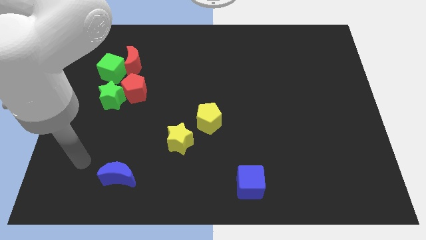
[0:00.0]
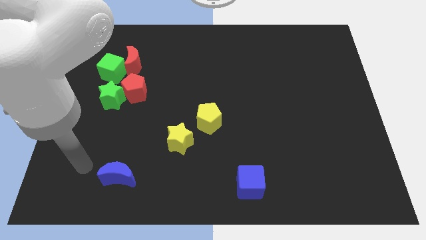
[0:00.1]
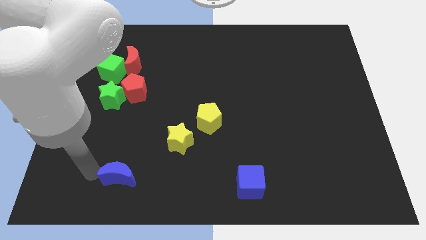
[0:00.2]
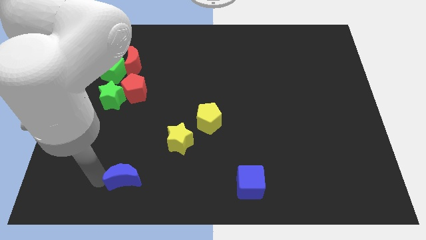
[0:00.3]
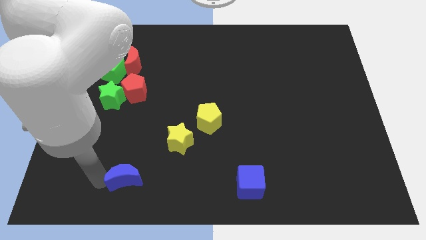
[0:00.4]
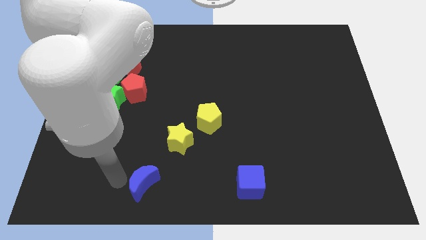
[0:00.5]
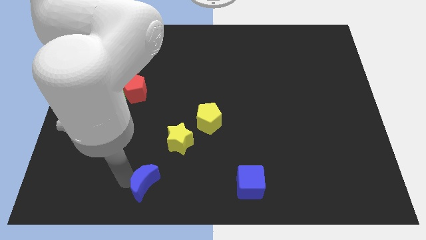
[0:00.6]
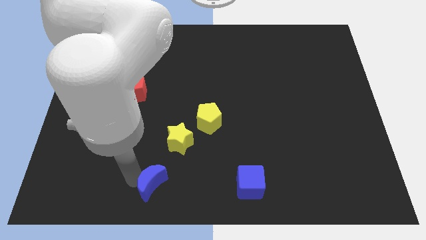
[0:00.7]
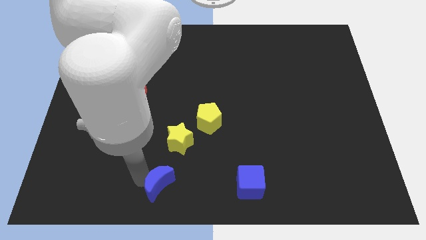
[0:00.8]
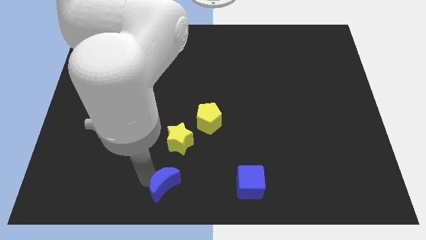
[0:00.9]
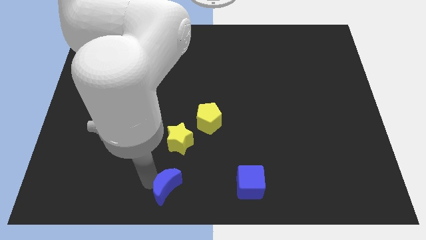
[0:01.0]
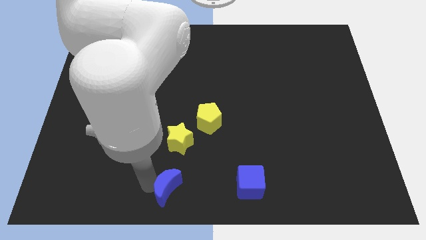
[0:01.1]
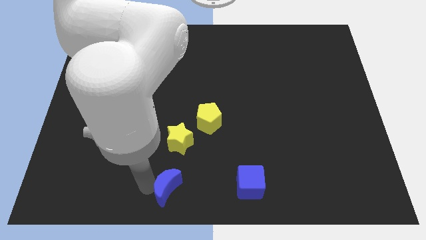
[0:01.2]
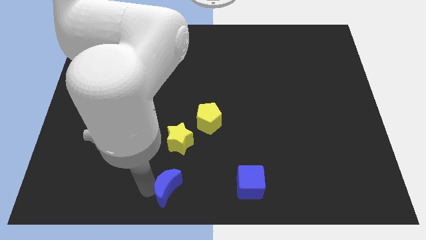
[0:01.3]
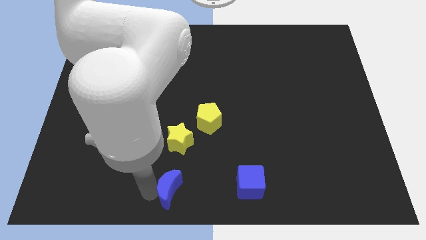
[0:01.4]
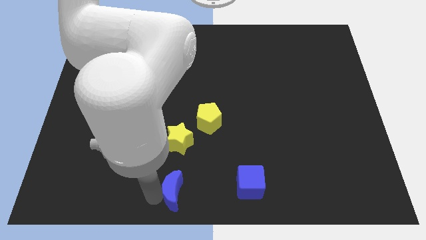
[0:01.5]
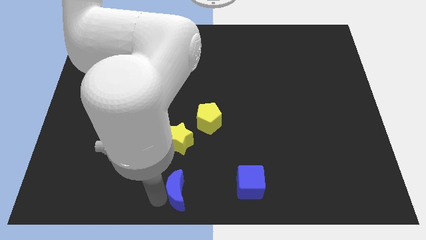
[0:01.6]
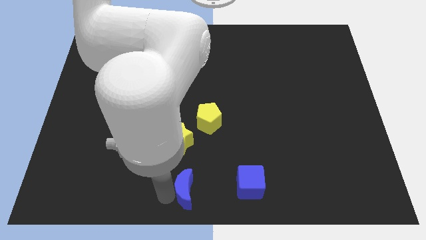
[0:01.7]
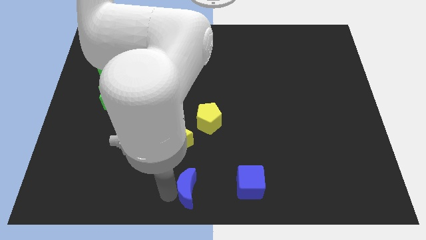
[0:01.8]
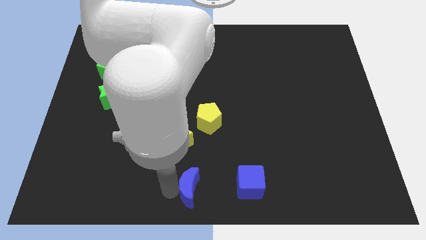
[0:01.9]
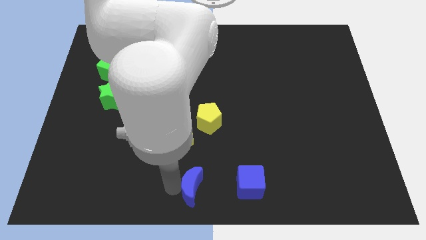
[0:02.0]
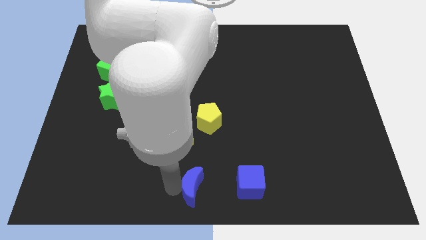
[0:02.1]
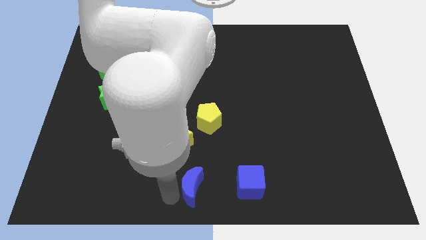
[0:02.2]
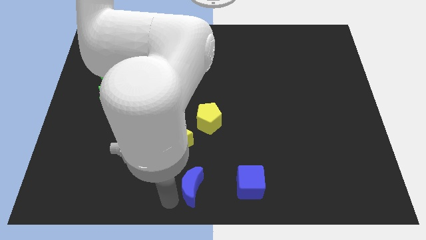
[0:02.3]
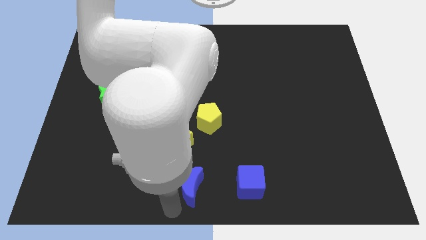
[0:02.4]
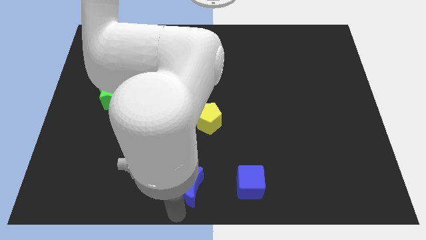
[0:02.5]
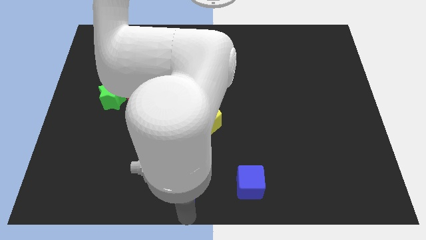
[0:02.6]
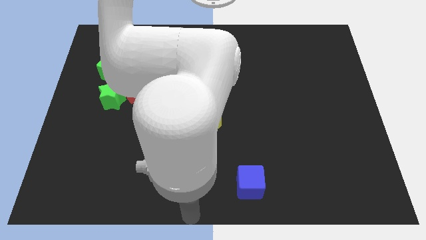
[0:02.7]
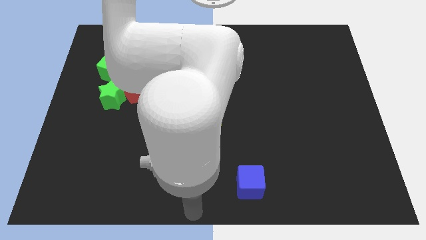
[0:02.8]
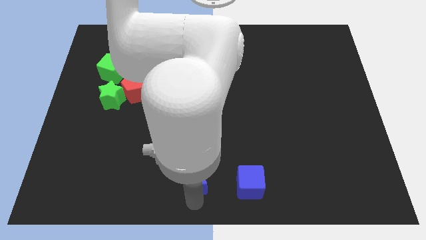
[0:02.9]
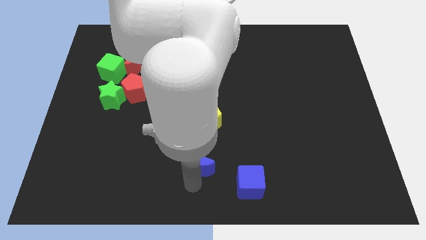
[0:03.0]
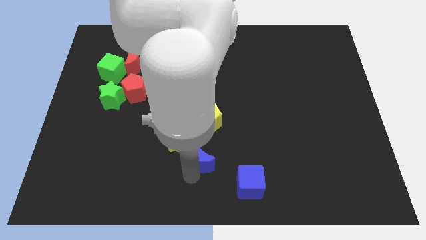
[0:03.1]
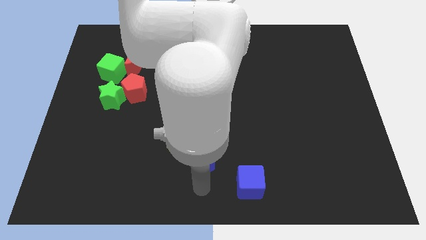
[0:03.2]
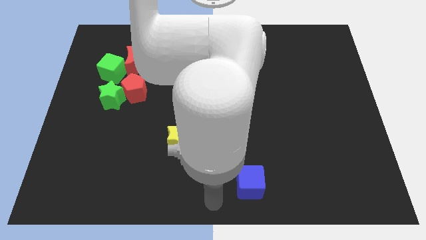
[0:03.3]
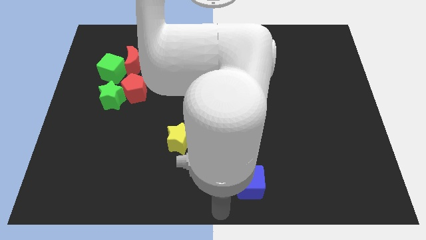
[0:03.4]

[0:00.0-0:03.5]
place the blue moon in between the yellow star and blue cube

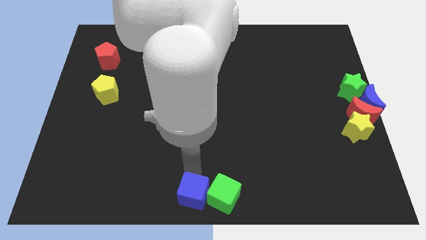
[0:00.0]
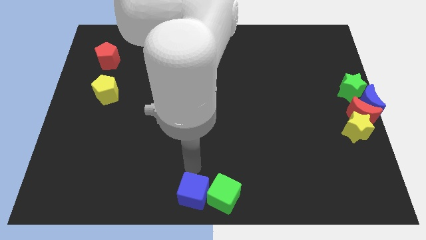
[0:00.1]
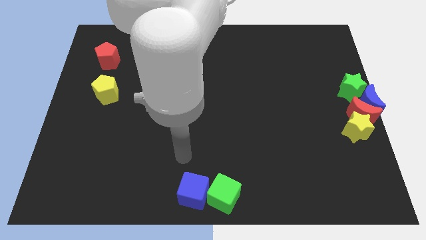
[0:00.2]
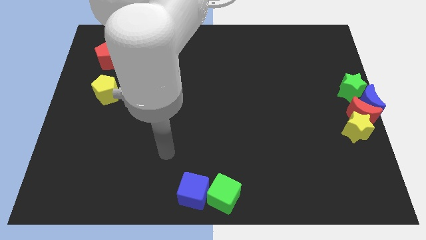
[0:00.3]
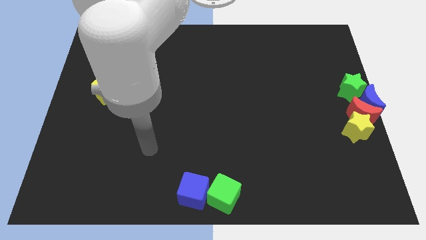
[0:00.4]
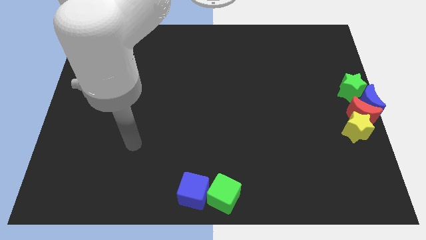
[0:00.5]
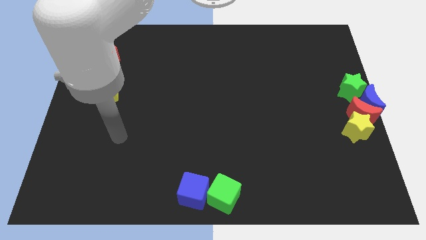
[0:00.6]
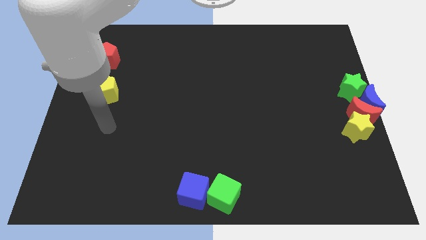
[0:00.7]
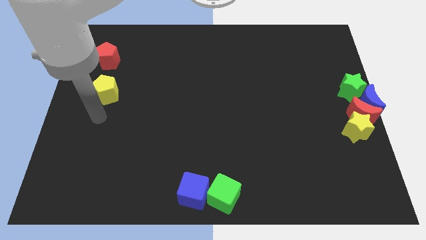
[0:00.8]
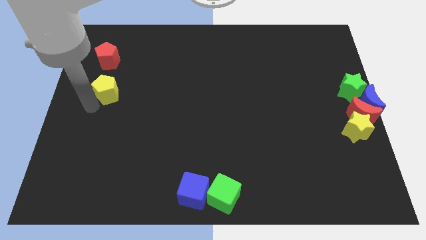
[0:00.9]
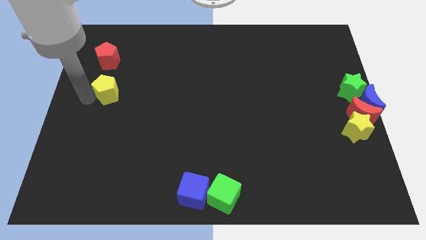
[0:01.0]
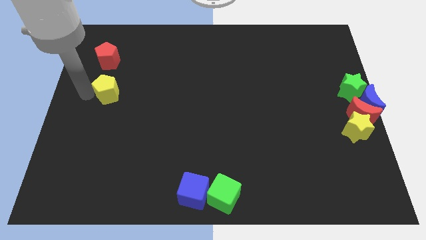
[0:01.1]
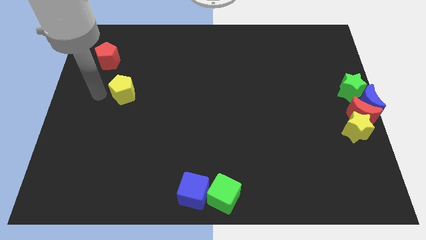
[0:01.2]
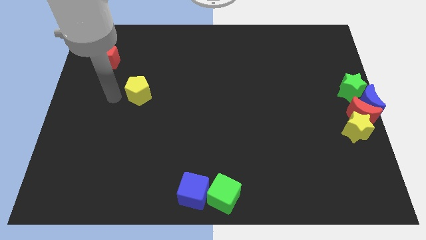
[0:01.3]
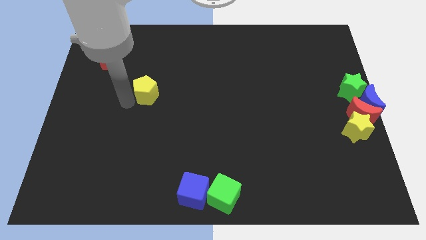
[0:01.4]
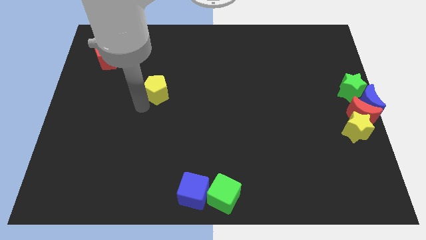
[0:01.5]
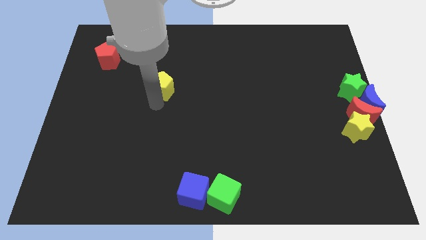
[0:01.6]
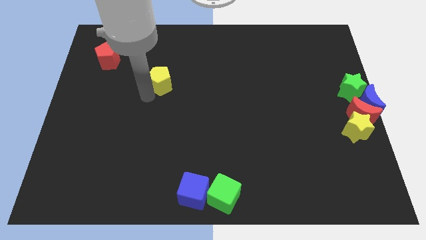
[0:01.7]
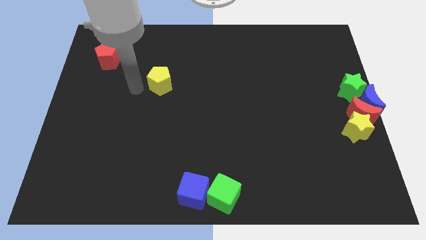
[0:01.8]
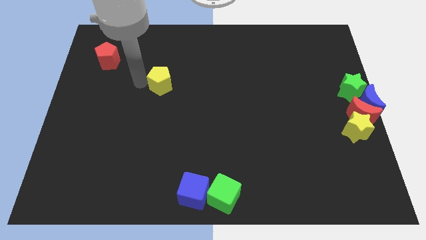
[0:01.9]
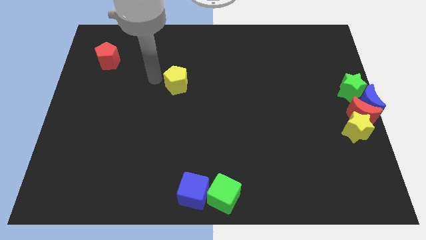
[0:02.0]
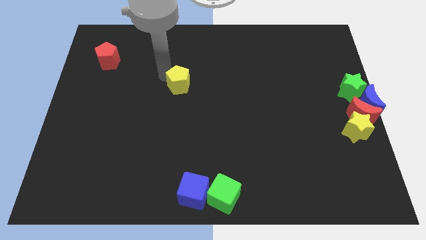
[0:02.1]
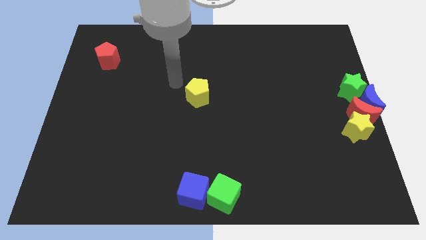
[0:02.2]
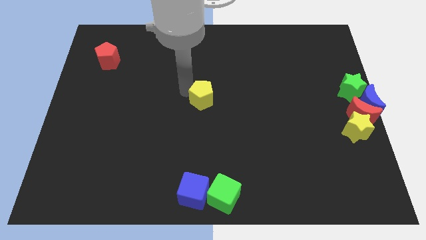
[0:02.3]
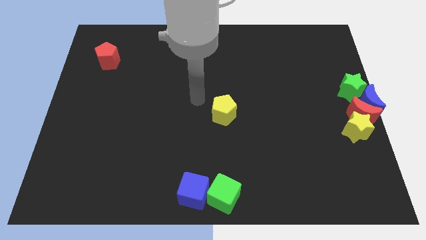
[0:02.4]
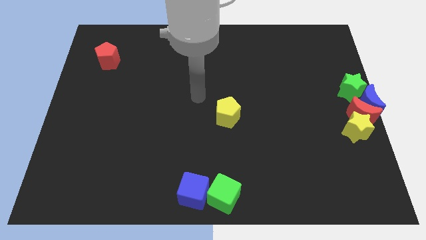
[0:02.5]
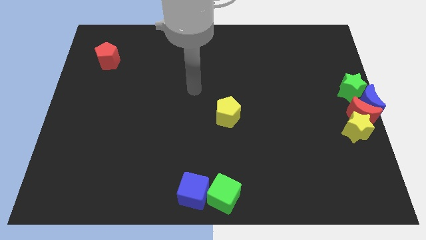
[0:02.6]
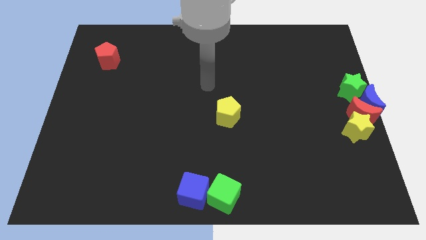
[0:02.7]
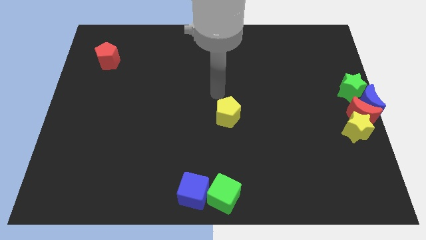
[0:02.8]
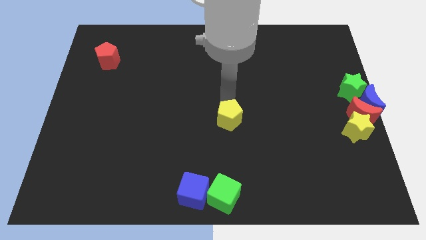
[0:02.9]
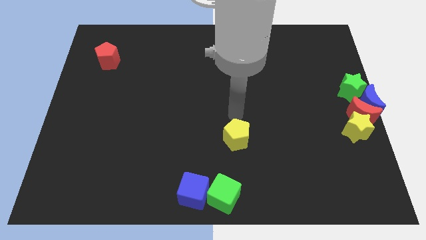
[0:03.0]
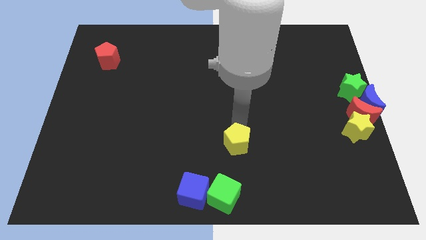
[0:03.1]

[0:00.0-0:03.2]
push the yellow pentagon parallel top right to the green cube

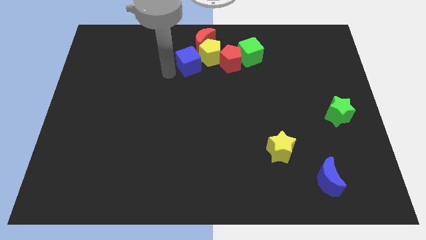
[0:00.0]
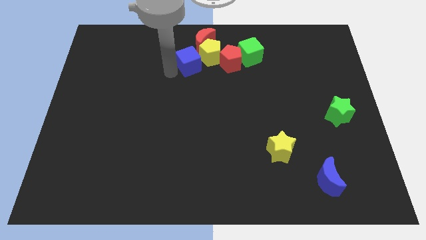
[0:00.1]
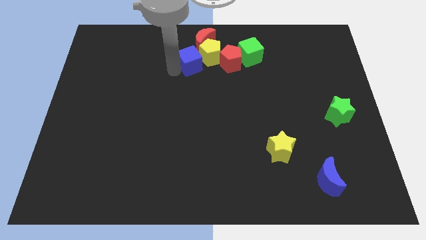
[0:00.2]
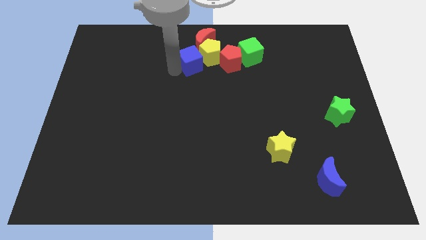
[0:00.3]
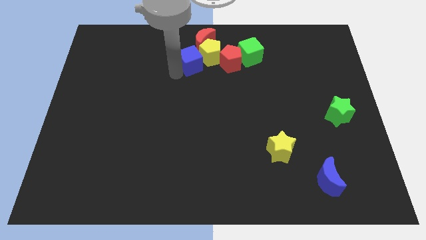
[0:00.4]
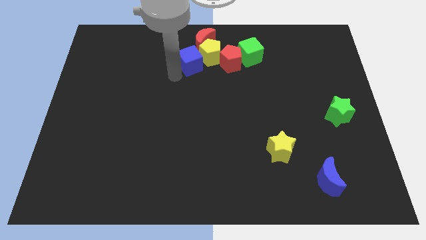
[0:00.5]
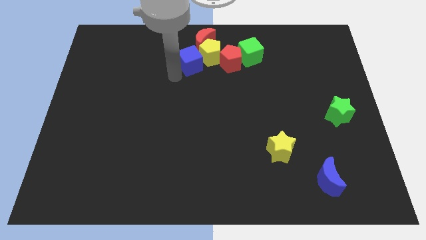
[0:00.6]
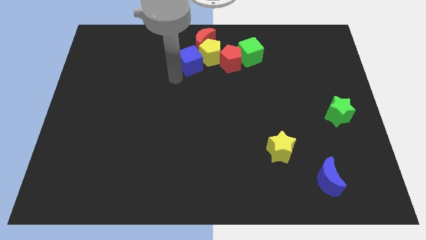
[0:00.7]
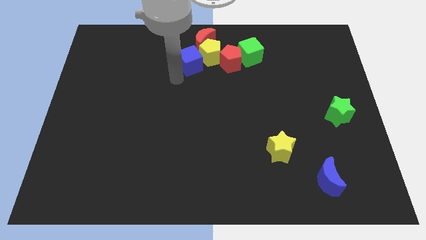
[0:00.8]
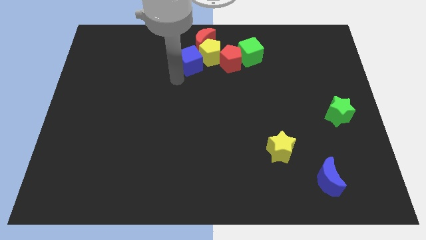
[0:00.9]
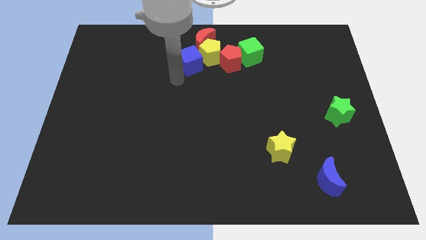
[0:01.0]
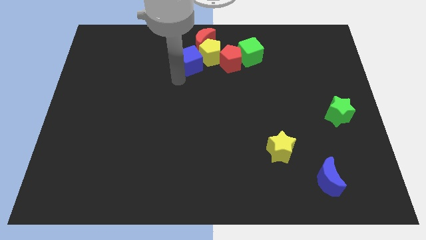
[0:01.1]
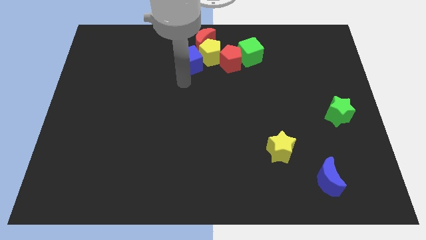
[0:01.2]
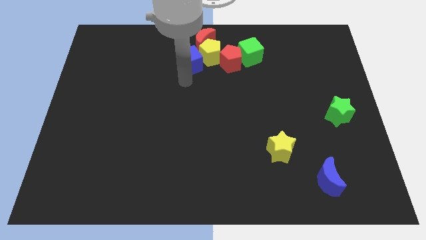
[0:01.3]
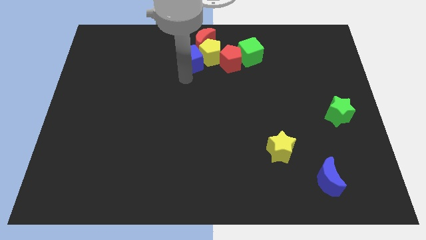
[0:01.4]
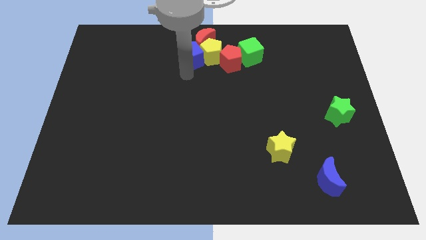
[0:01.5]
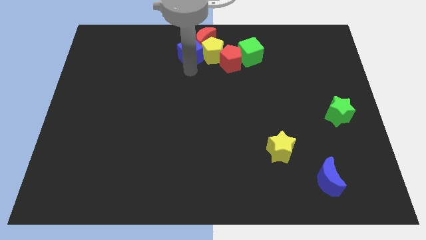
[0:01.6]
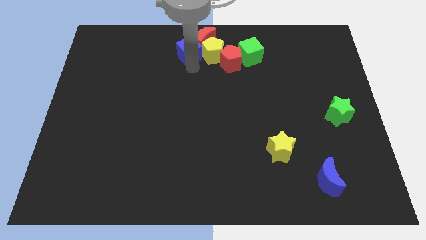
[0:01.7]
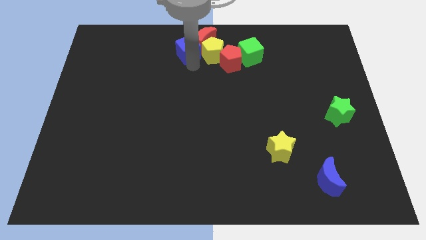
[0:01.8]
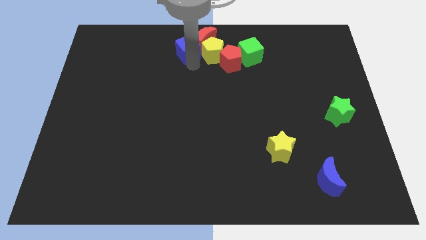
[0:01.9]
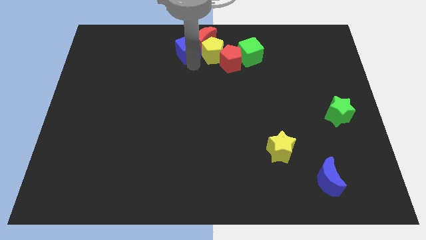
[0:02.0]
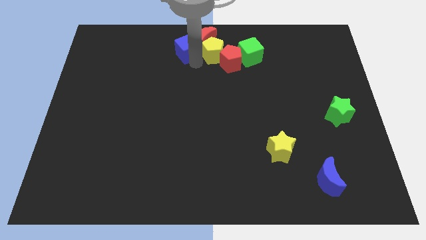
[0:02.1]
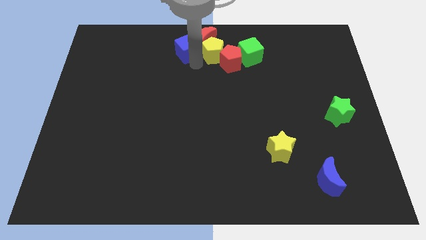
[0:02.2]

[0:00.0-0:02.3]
move the blue cube close to the group of blocks
